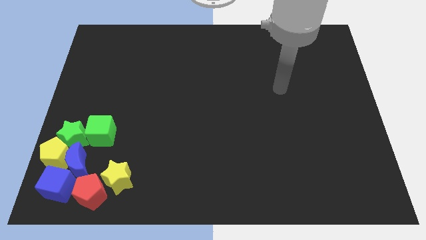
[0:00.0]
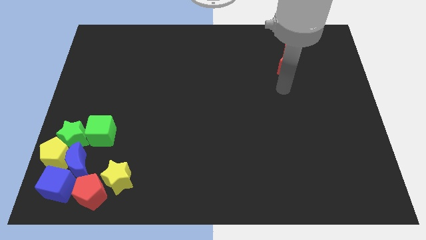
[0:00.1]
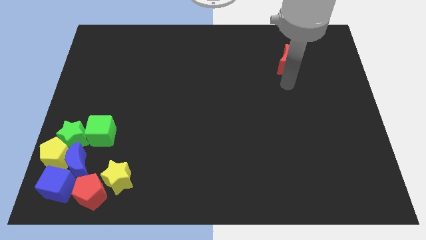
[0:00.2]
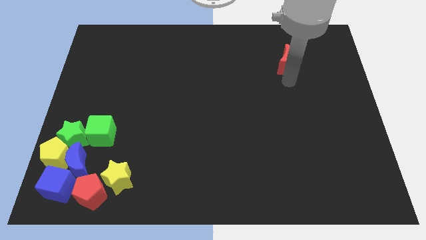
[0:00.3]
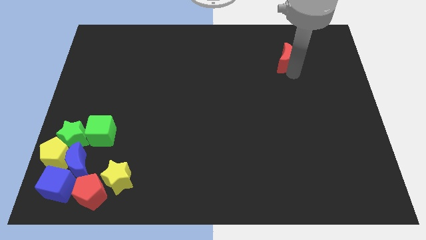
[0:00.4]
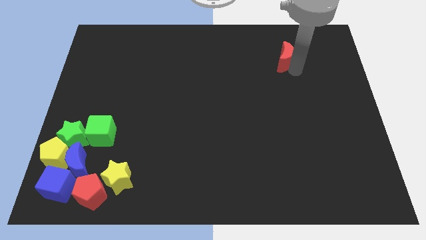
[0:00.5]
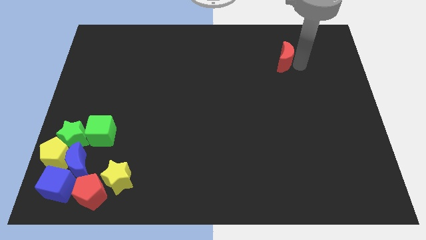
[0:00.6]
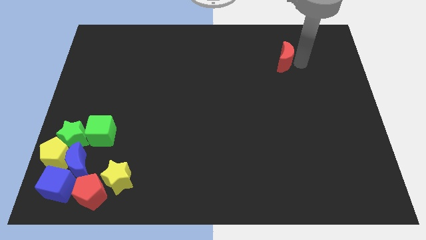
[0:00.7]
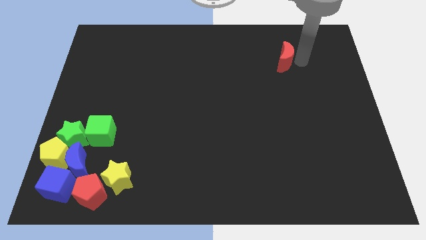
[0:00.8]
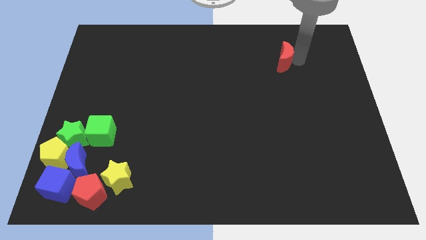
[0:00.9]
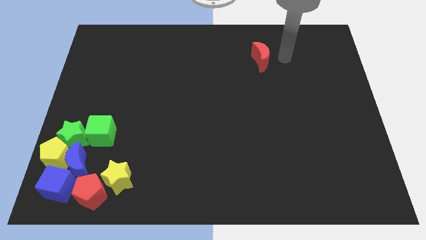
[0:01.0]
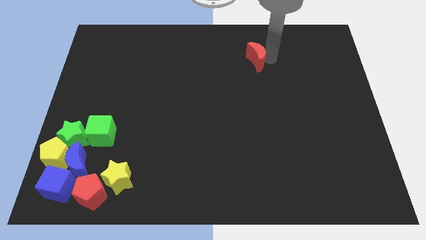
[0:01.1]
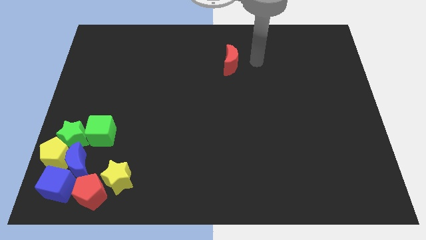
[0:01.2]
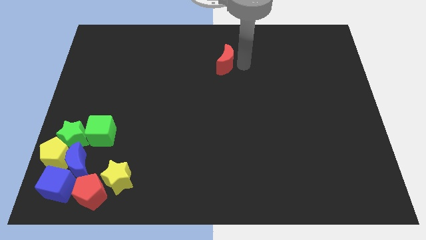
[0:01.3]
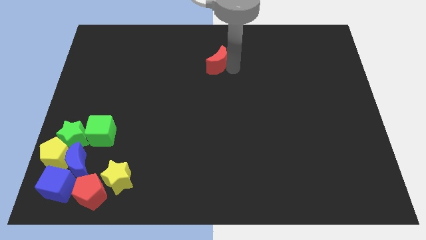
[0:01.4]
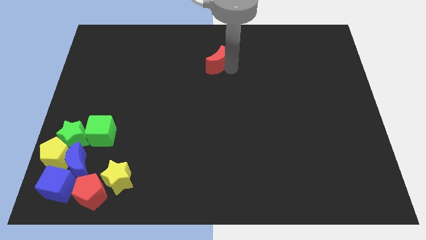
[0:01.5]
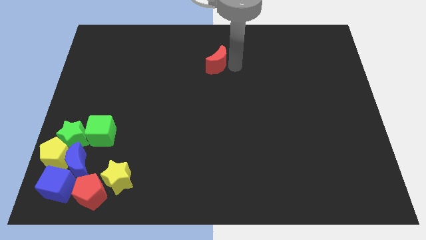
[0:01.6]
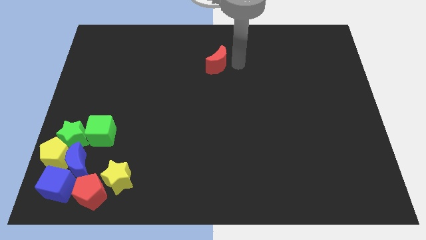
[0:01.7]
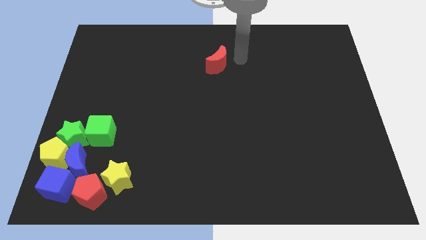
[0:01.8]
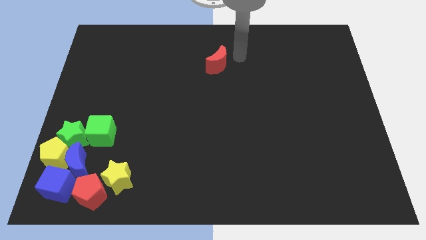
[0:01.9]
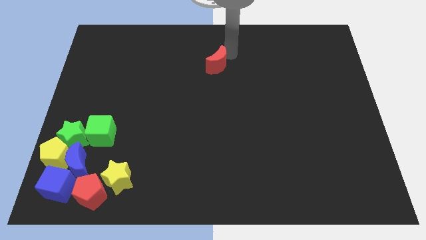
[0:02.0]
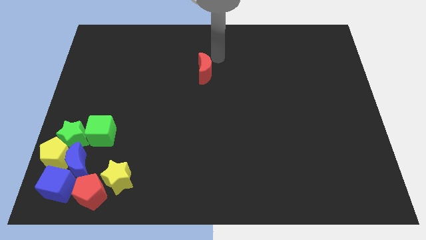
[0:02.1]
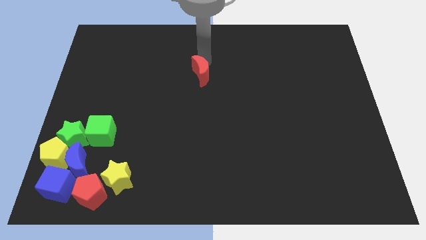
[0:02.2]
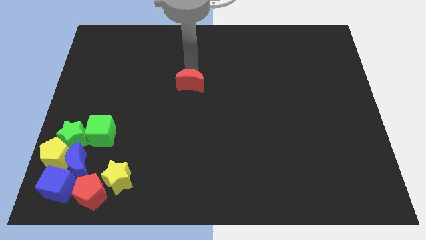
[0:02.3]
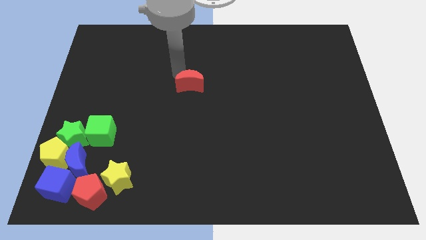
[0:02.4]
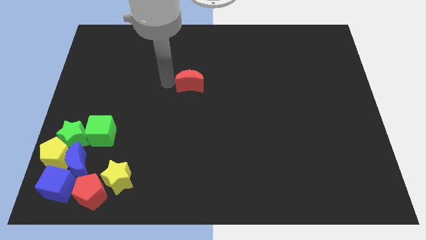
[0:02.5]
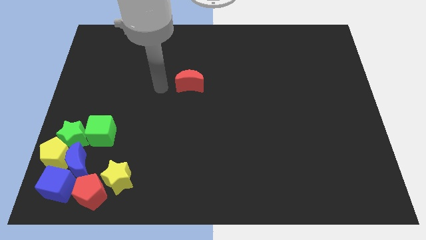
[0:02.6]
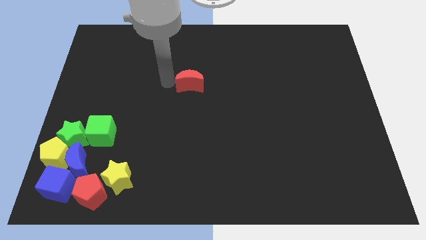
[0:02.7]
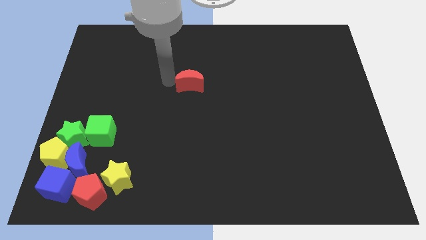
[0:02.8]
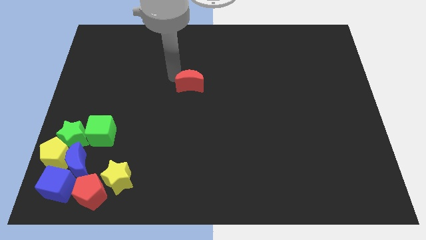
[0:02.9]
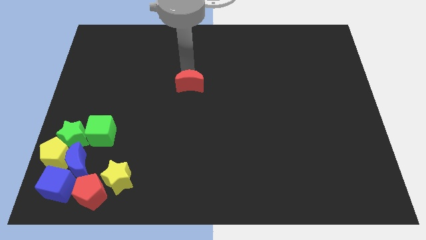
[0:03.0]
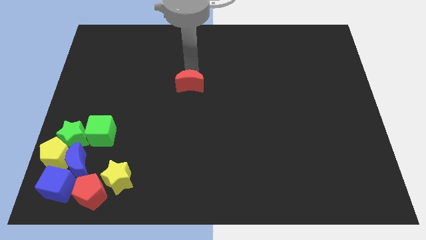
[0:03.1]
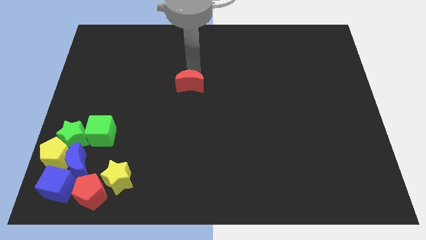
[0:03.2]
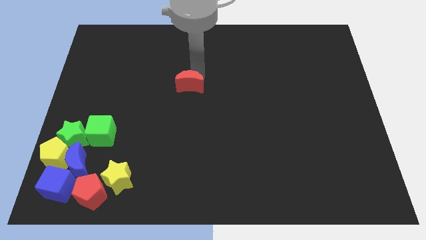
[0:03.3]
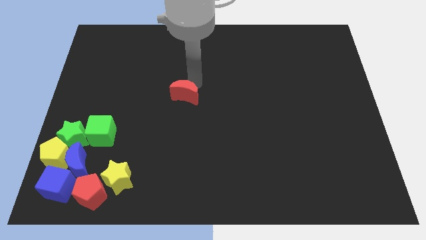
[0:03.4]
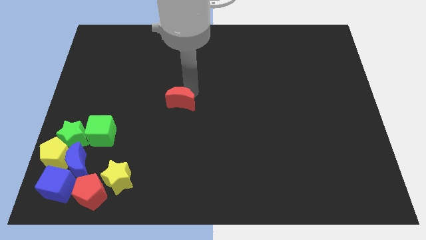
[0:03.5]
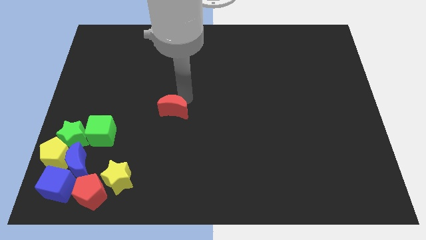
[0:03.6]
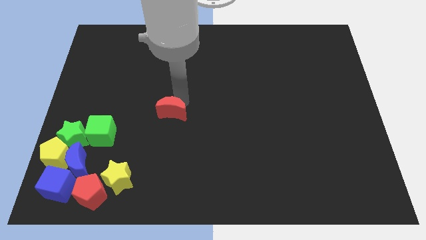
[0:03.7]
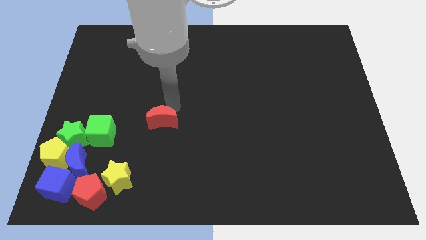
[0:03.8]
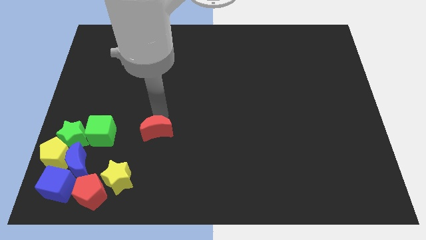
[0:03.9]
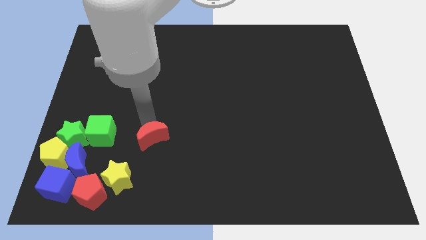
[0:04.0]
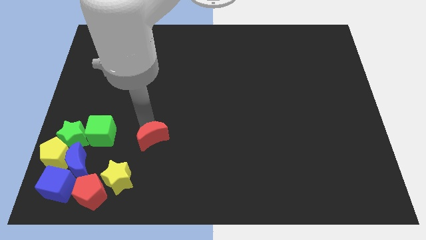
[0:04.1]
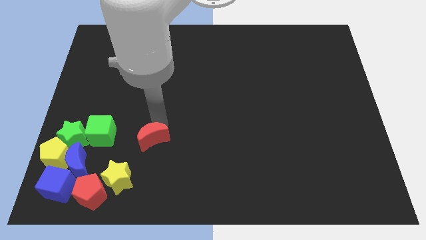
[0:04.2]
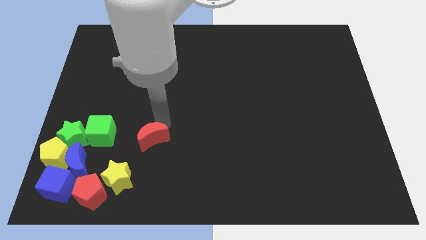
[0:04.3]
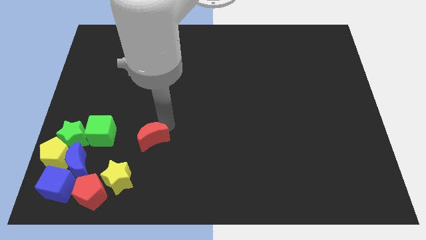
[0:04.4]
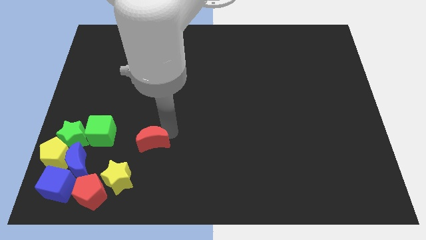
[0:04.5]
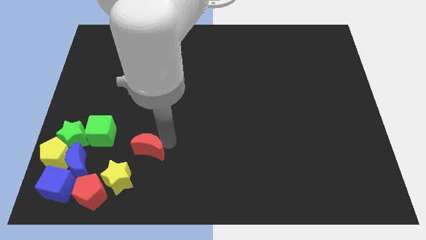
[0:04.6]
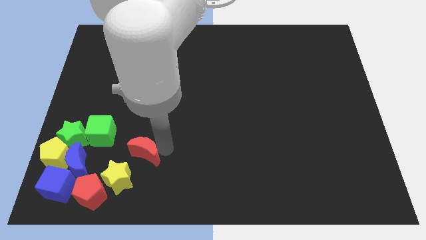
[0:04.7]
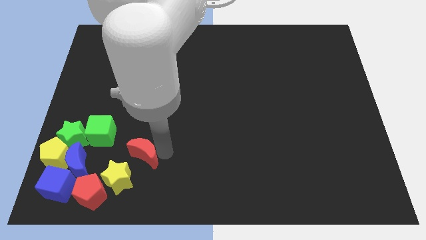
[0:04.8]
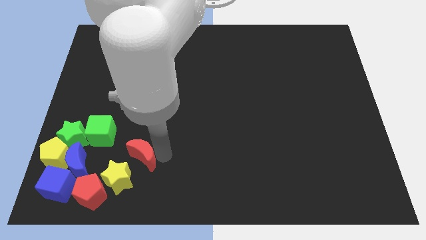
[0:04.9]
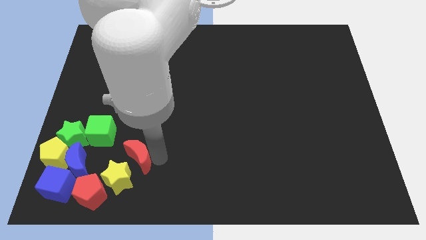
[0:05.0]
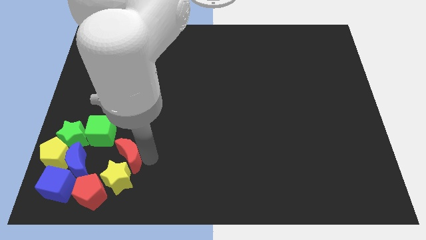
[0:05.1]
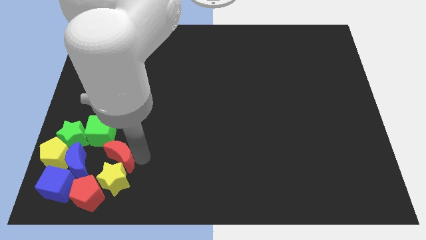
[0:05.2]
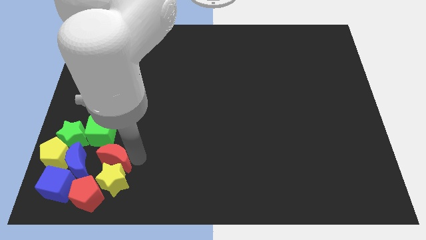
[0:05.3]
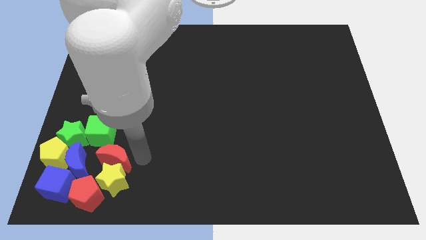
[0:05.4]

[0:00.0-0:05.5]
push the red crescent into yellow star

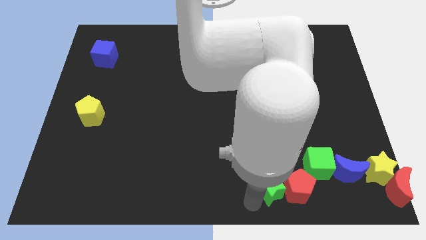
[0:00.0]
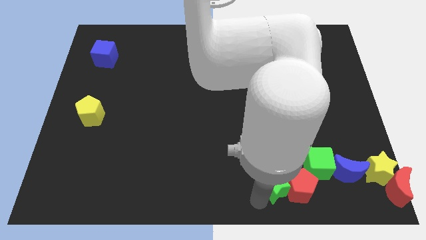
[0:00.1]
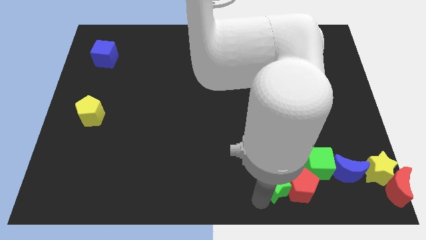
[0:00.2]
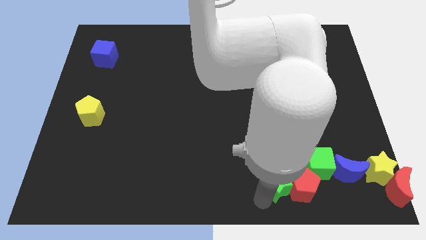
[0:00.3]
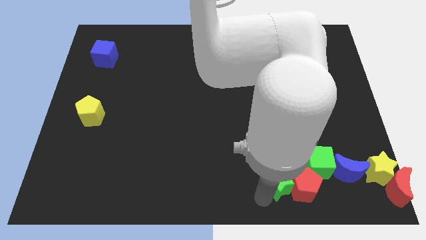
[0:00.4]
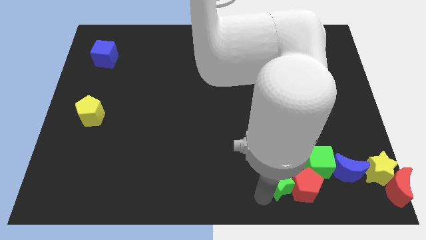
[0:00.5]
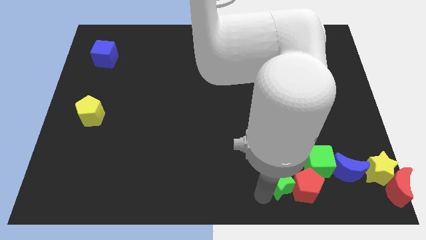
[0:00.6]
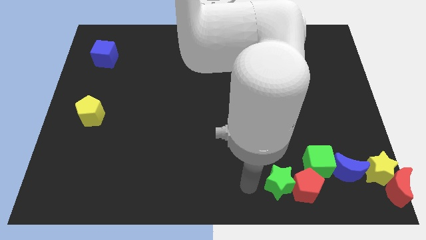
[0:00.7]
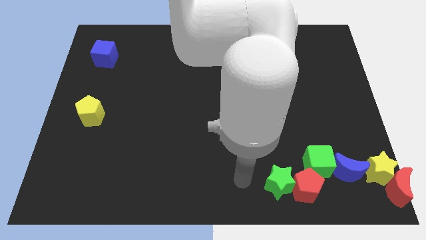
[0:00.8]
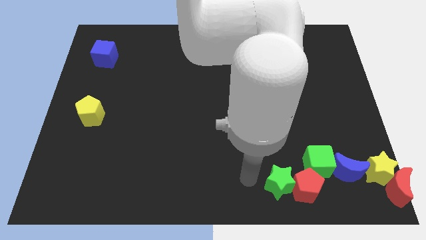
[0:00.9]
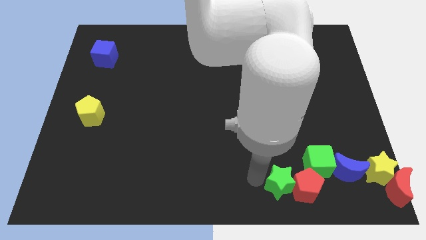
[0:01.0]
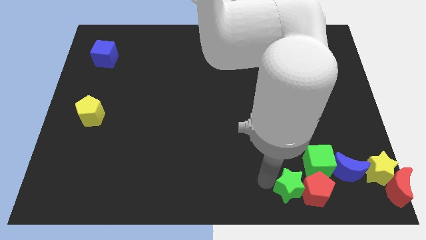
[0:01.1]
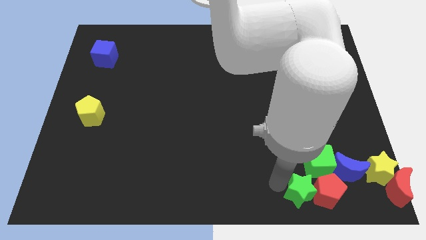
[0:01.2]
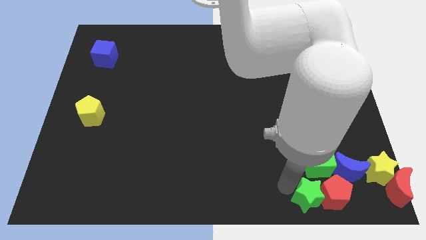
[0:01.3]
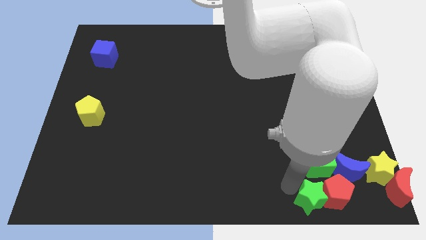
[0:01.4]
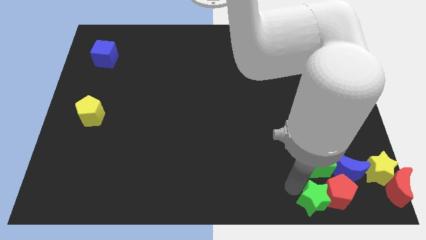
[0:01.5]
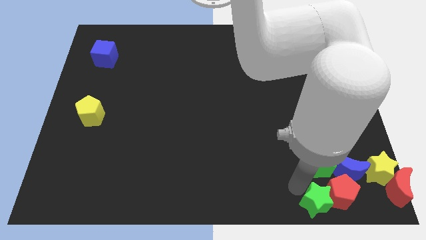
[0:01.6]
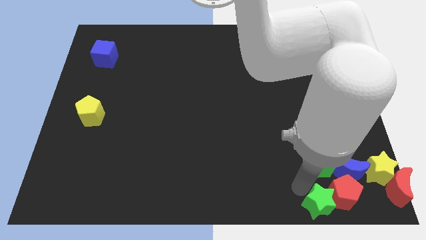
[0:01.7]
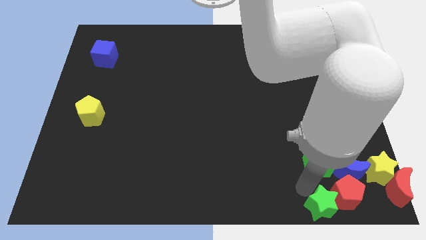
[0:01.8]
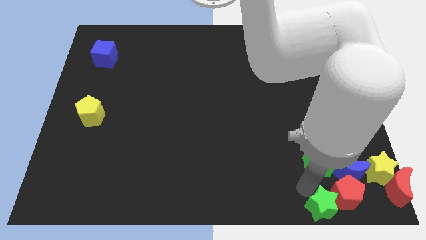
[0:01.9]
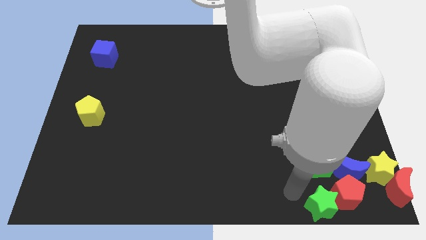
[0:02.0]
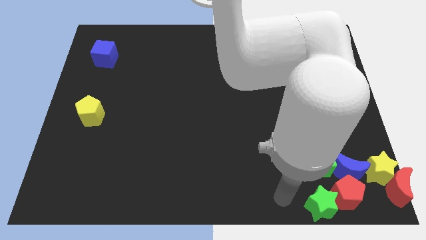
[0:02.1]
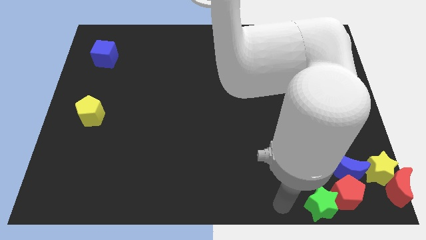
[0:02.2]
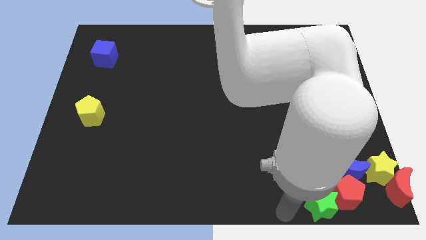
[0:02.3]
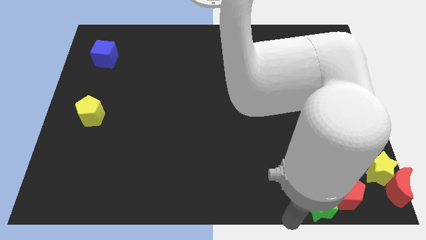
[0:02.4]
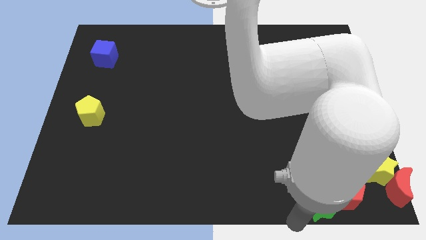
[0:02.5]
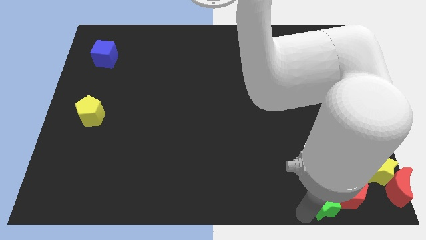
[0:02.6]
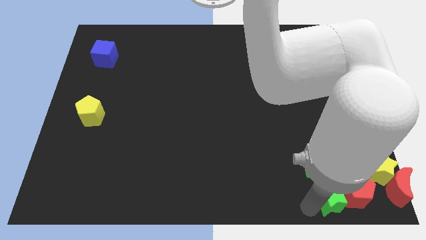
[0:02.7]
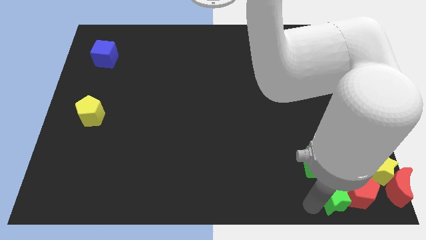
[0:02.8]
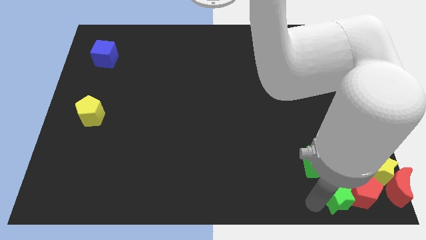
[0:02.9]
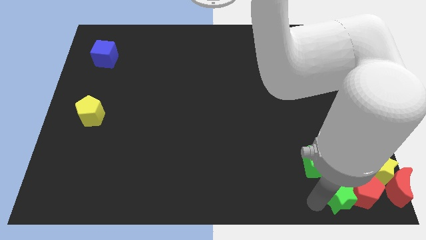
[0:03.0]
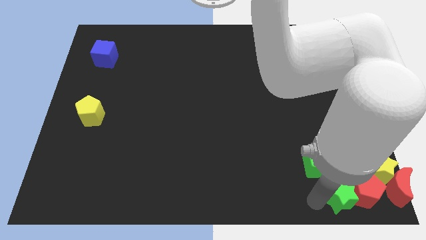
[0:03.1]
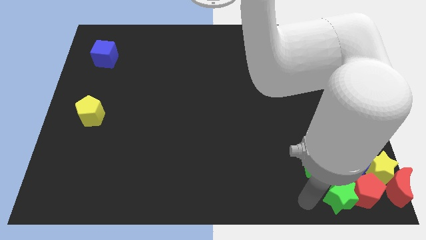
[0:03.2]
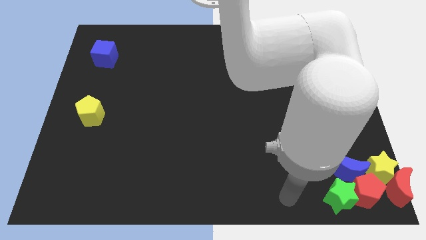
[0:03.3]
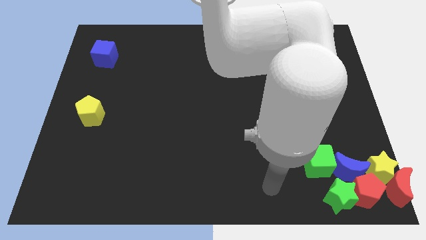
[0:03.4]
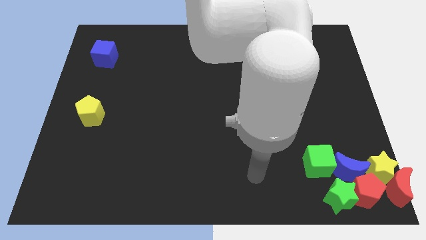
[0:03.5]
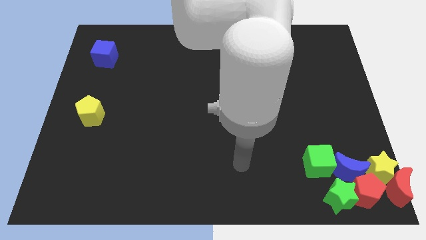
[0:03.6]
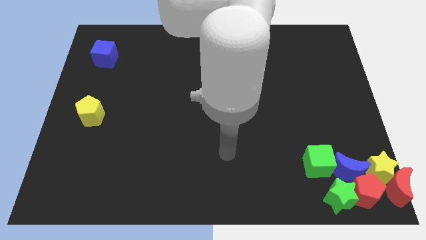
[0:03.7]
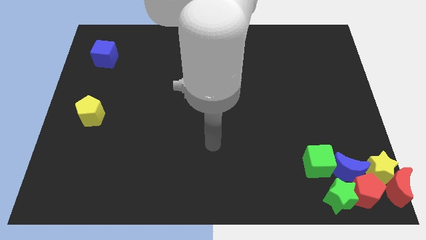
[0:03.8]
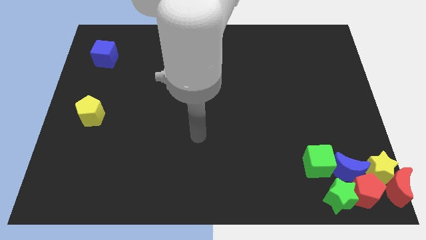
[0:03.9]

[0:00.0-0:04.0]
place green star to the bottom of blue moon
